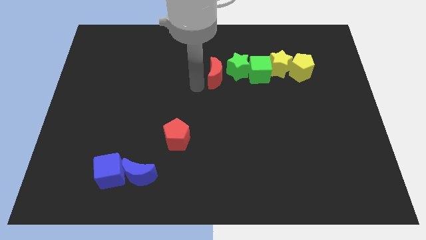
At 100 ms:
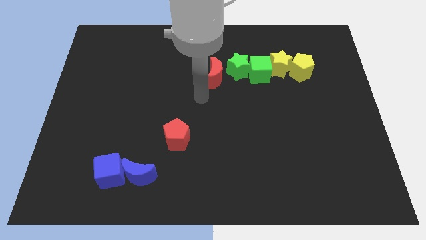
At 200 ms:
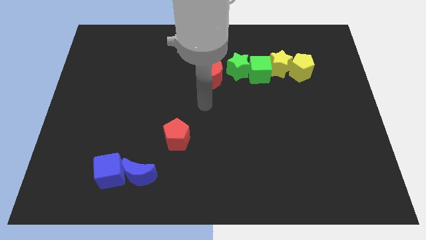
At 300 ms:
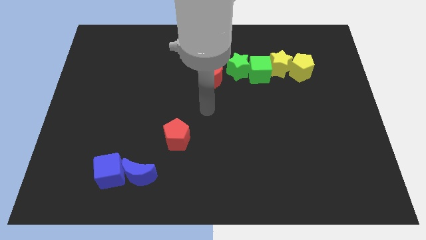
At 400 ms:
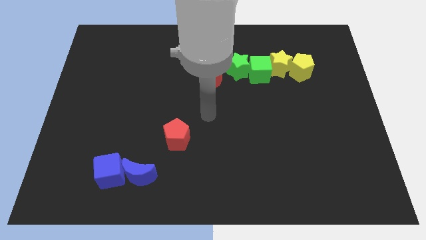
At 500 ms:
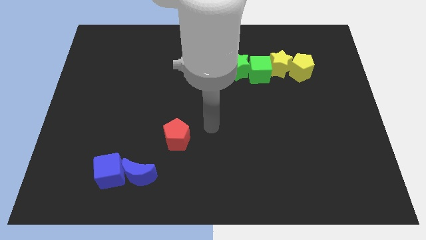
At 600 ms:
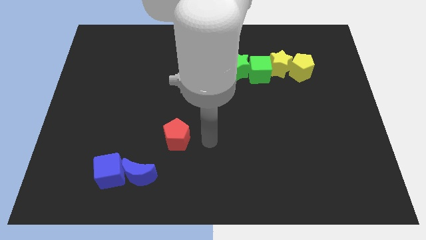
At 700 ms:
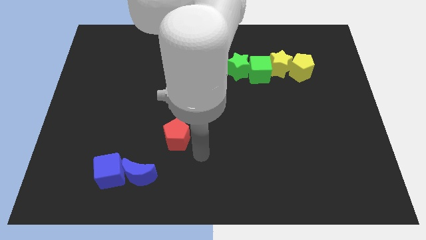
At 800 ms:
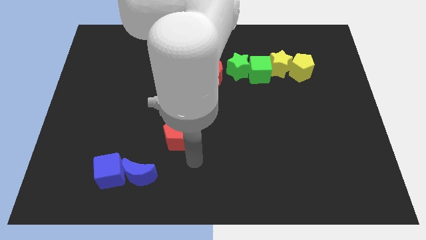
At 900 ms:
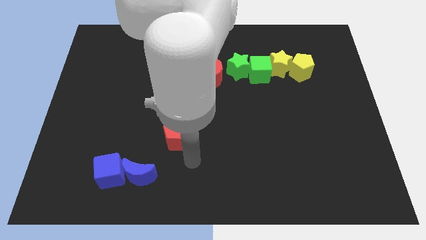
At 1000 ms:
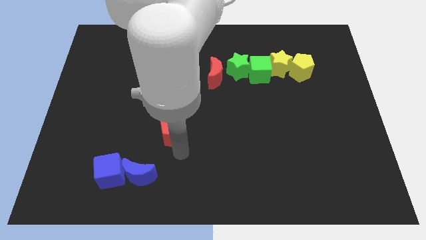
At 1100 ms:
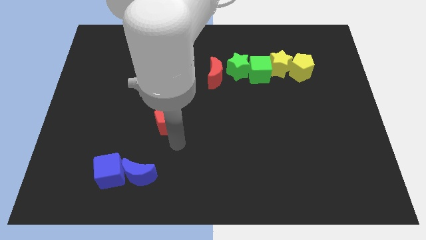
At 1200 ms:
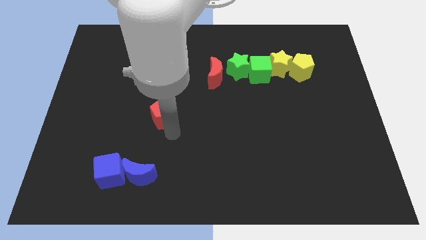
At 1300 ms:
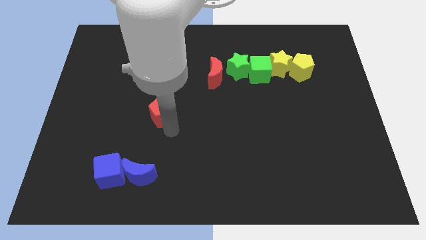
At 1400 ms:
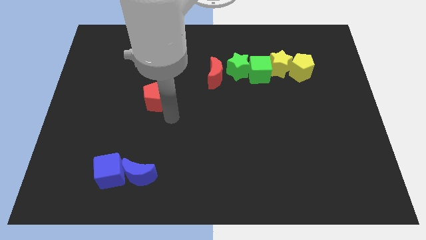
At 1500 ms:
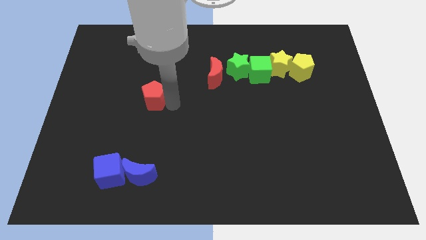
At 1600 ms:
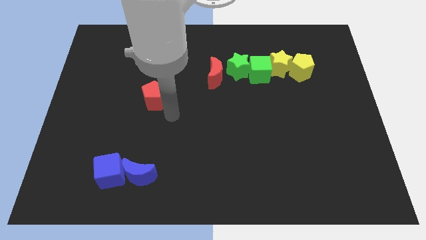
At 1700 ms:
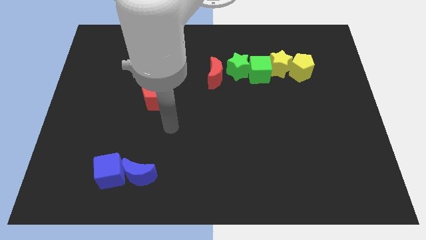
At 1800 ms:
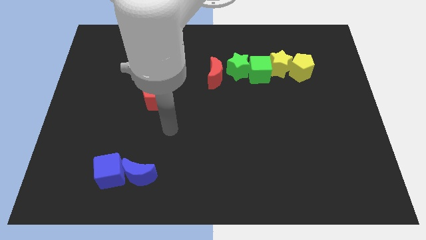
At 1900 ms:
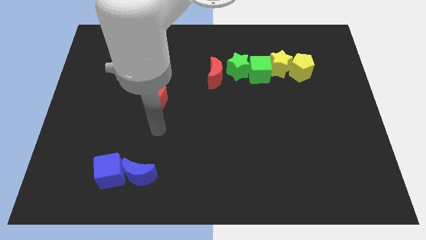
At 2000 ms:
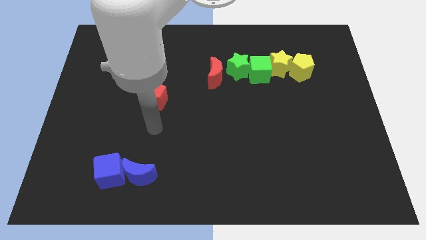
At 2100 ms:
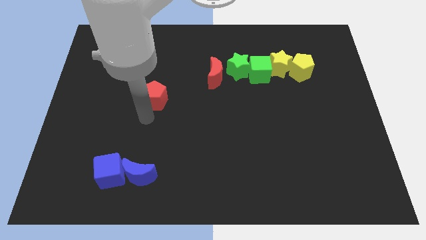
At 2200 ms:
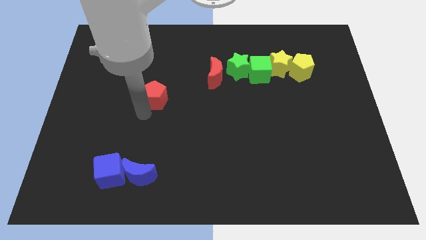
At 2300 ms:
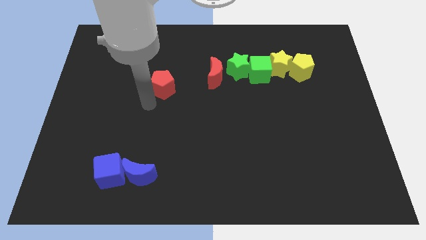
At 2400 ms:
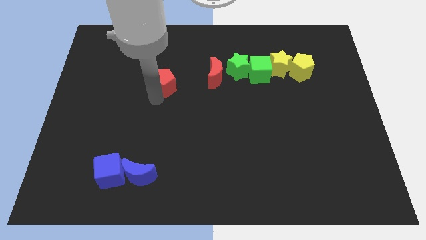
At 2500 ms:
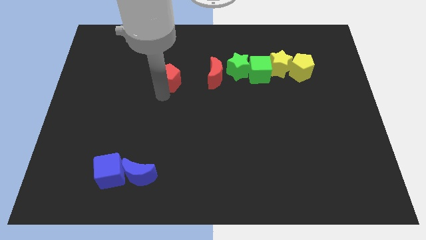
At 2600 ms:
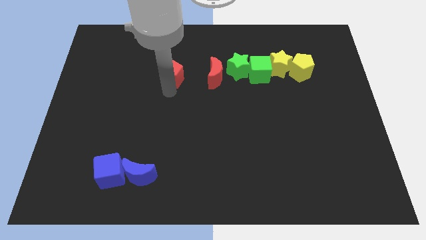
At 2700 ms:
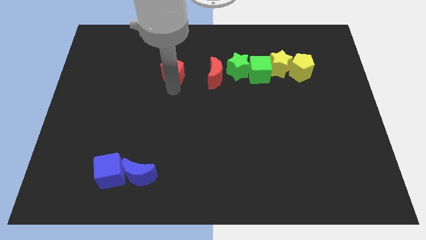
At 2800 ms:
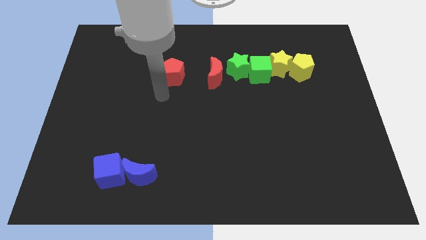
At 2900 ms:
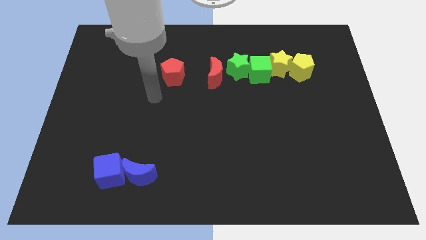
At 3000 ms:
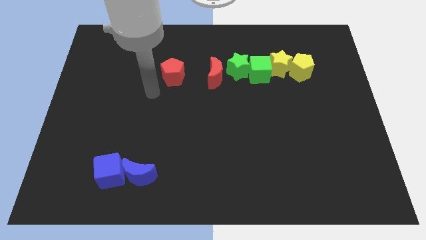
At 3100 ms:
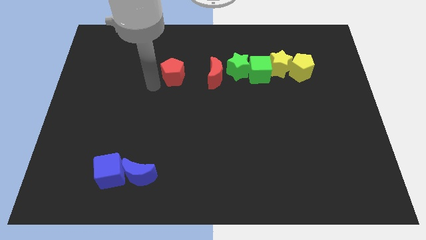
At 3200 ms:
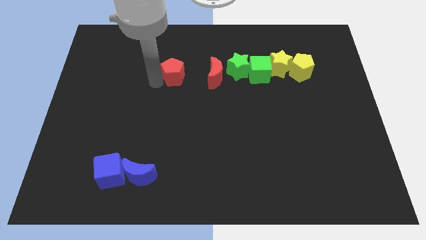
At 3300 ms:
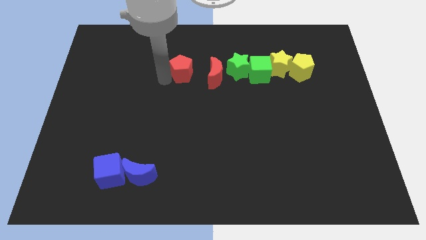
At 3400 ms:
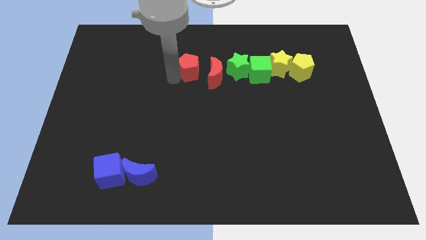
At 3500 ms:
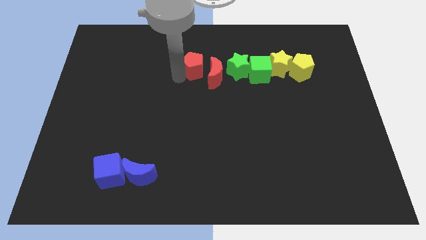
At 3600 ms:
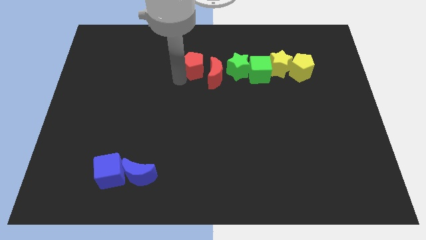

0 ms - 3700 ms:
move the redpentagon towards the left side of the red moon

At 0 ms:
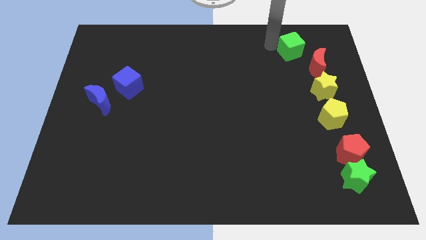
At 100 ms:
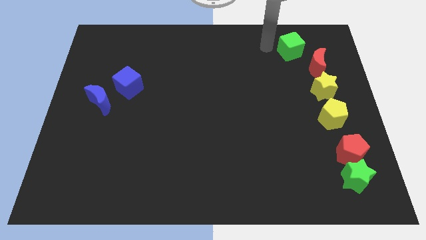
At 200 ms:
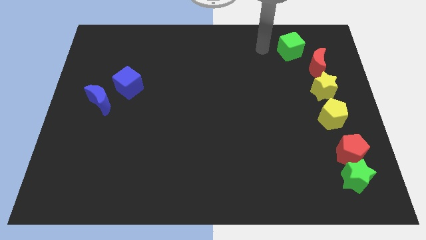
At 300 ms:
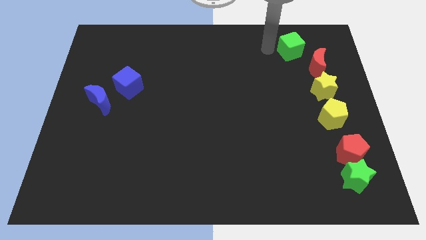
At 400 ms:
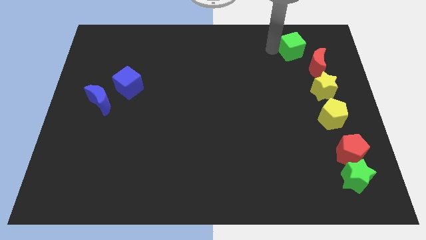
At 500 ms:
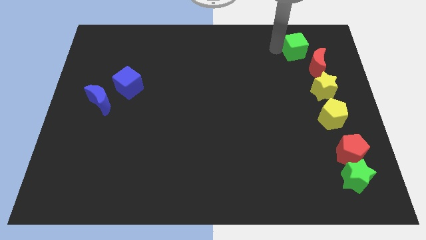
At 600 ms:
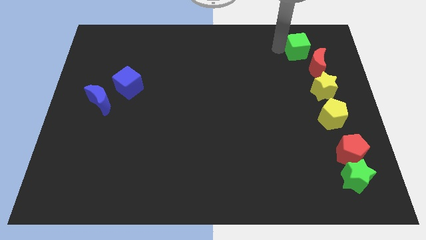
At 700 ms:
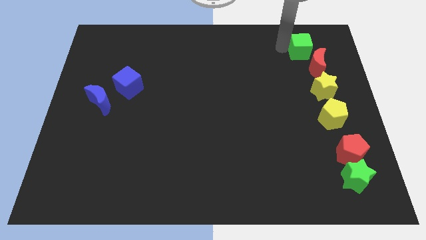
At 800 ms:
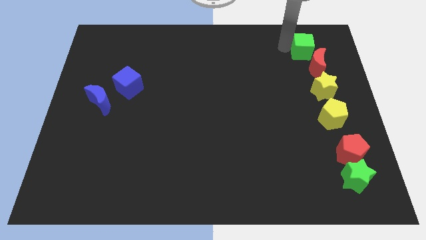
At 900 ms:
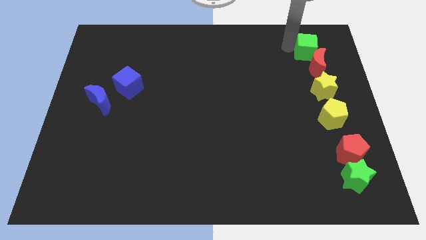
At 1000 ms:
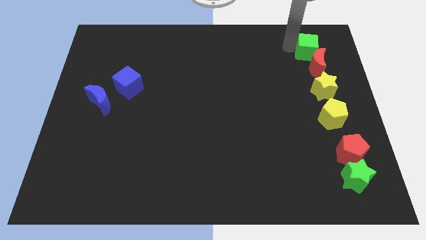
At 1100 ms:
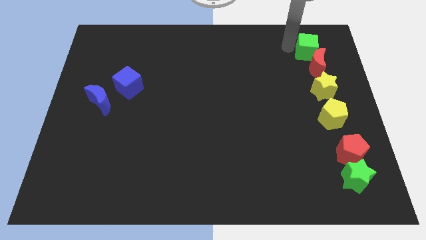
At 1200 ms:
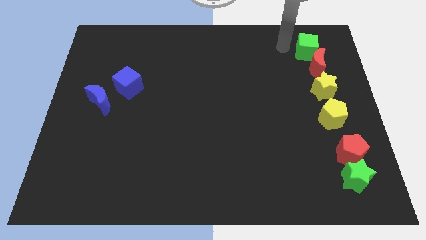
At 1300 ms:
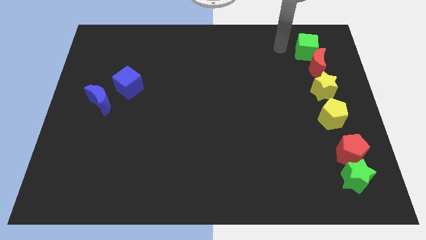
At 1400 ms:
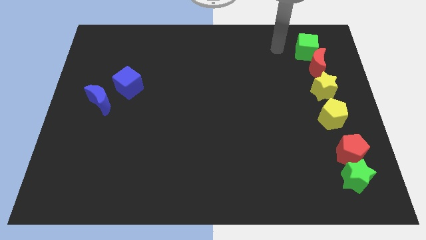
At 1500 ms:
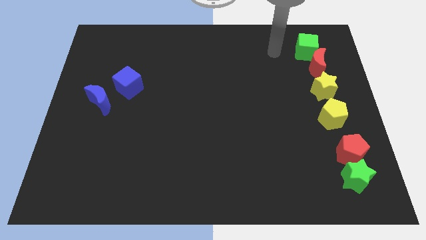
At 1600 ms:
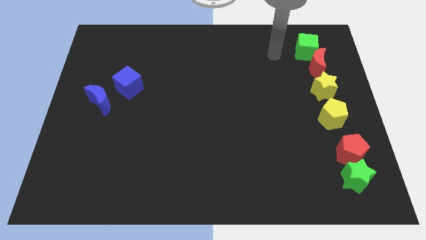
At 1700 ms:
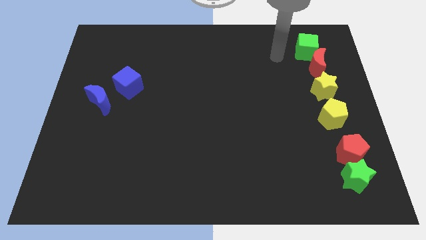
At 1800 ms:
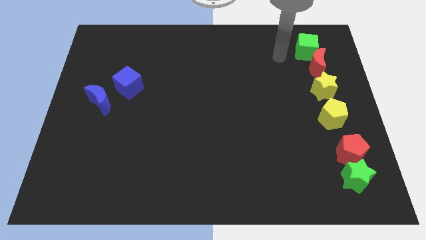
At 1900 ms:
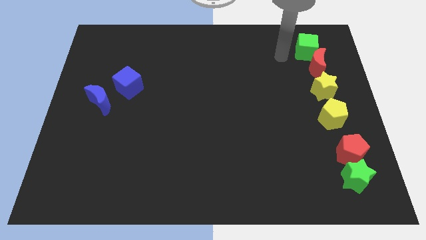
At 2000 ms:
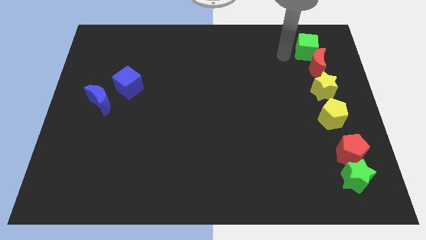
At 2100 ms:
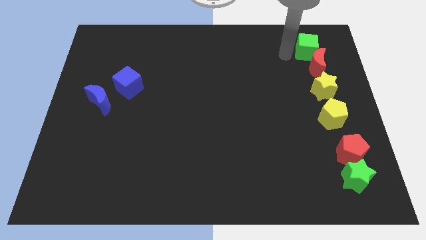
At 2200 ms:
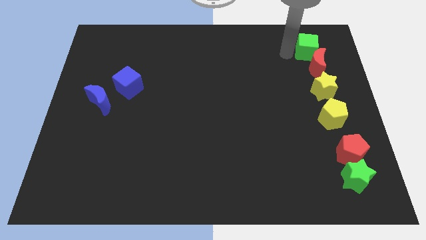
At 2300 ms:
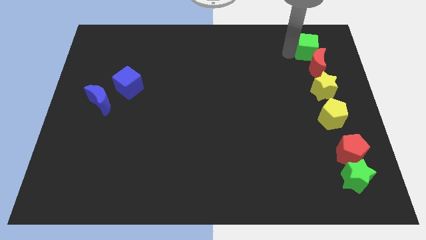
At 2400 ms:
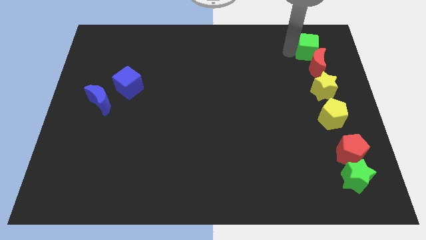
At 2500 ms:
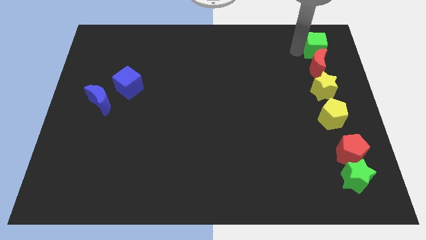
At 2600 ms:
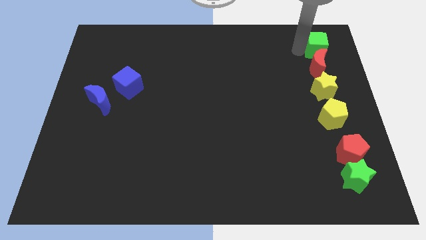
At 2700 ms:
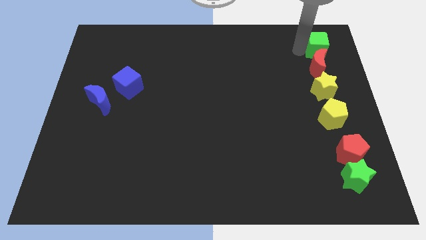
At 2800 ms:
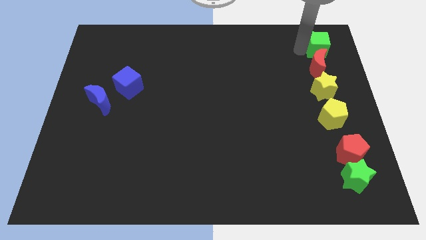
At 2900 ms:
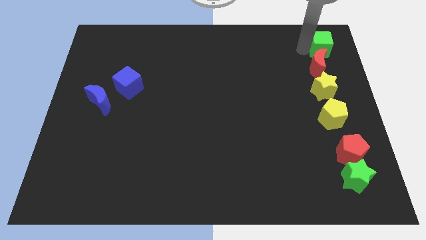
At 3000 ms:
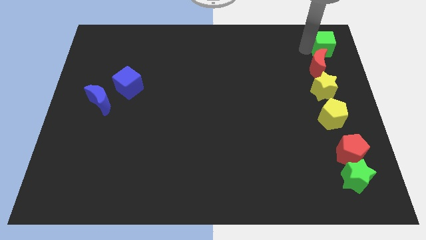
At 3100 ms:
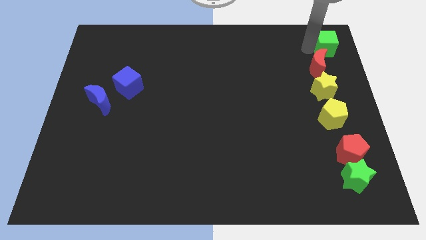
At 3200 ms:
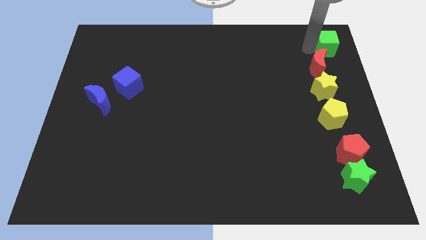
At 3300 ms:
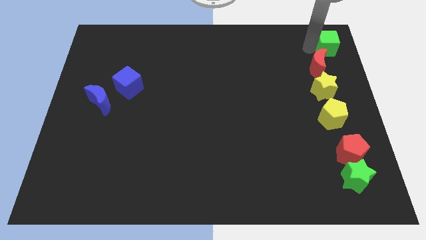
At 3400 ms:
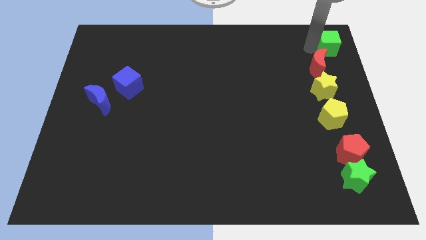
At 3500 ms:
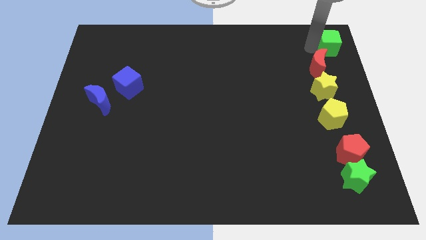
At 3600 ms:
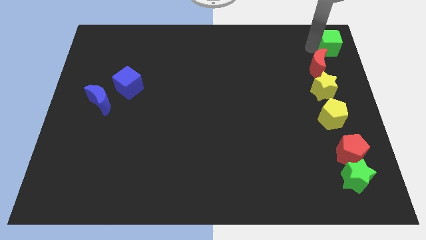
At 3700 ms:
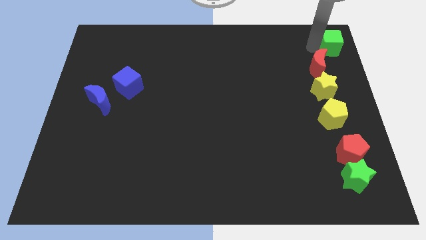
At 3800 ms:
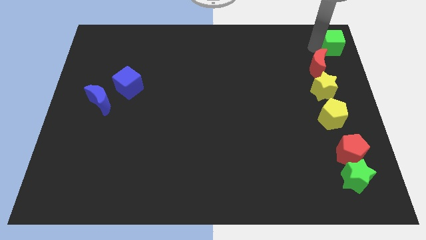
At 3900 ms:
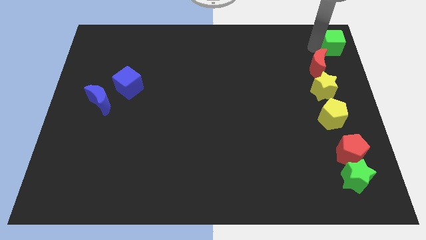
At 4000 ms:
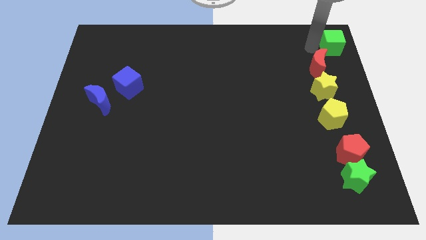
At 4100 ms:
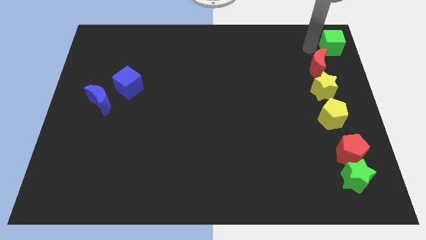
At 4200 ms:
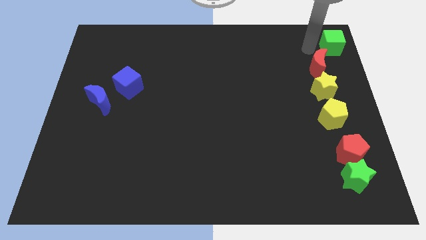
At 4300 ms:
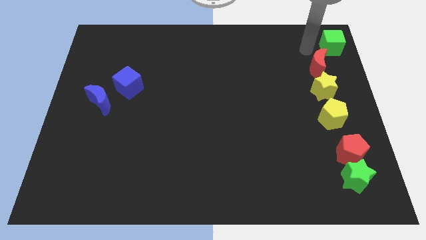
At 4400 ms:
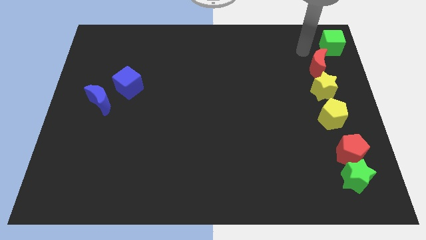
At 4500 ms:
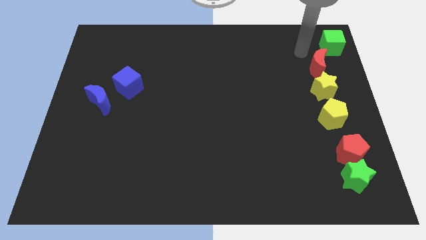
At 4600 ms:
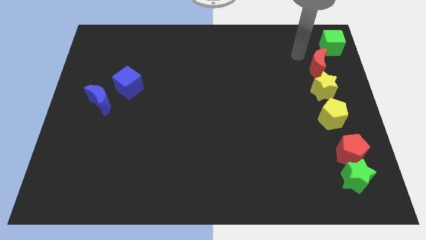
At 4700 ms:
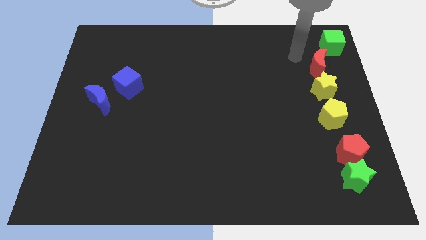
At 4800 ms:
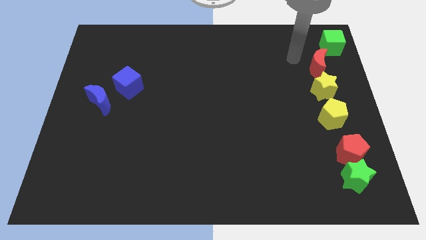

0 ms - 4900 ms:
push the green cube to the top right corner of the board

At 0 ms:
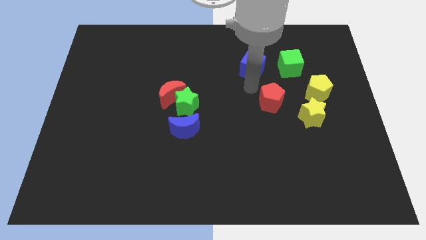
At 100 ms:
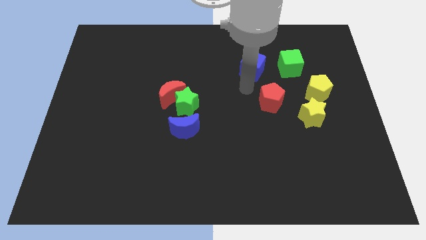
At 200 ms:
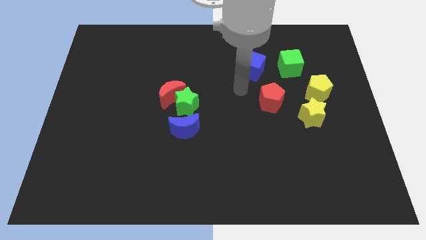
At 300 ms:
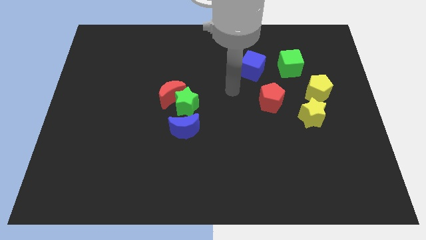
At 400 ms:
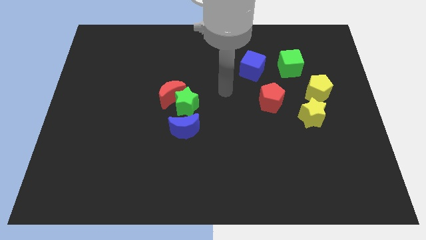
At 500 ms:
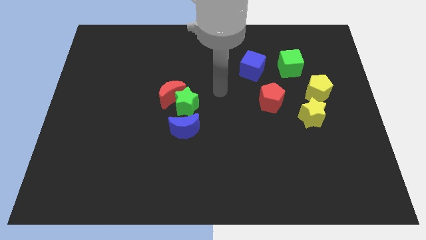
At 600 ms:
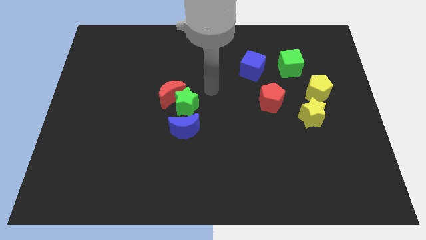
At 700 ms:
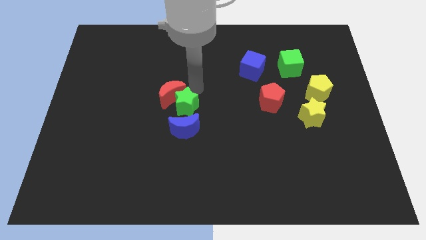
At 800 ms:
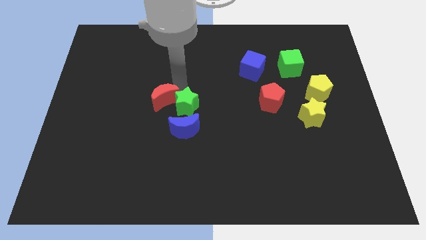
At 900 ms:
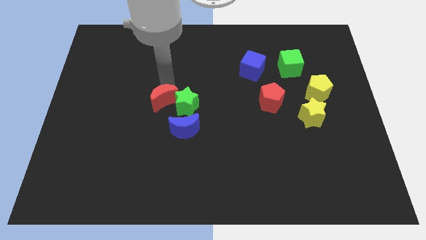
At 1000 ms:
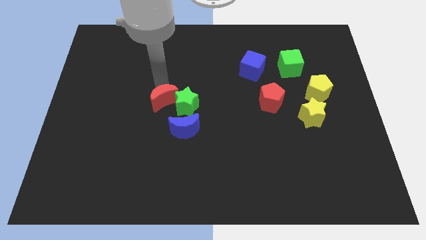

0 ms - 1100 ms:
tap the red crescent
